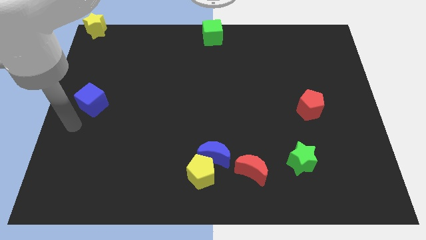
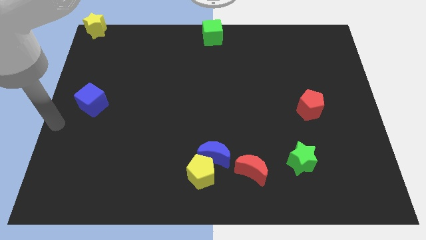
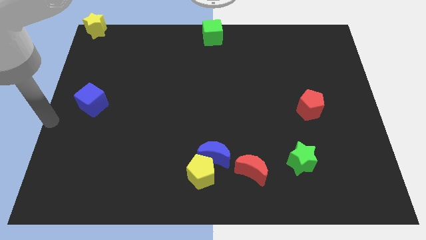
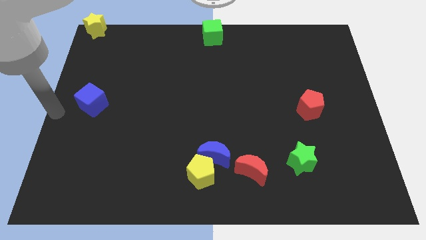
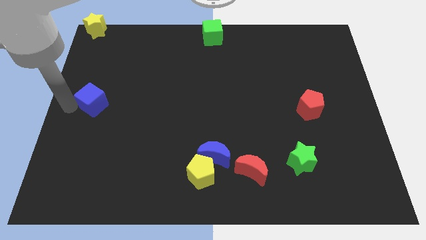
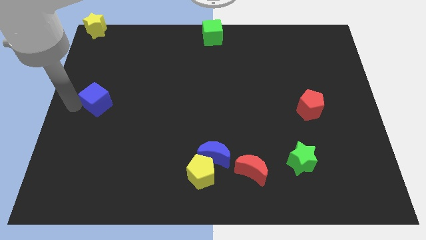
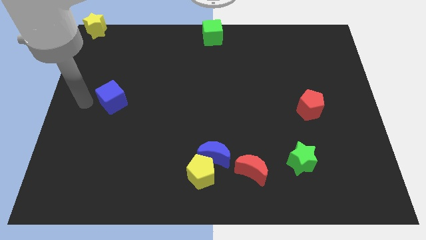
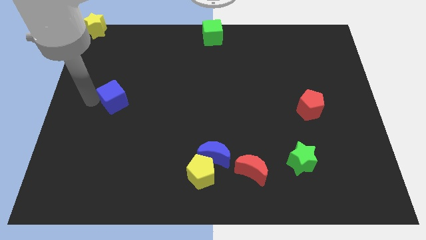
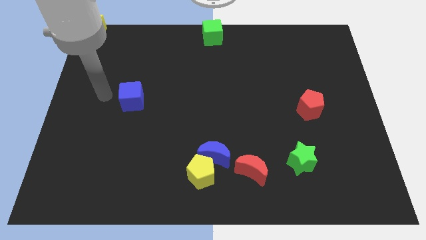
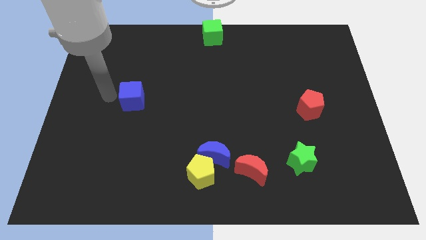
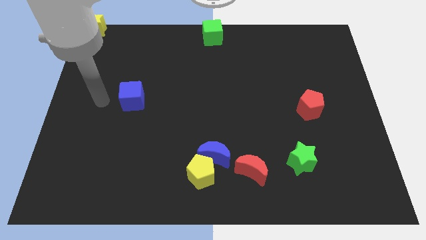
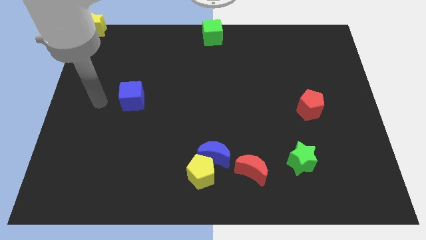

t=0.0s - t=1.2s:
push blue cube towards the right

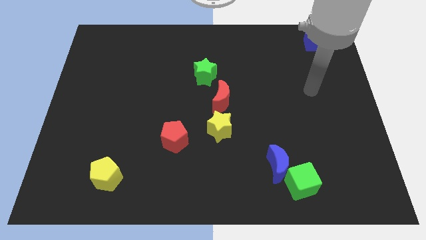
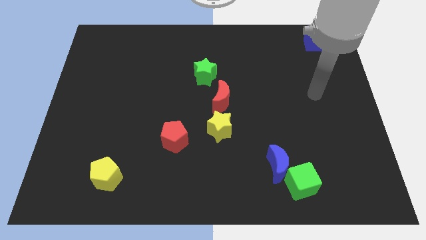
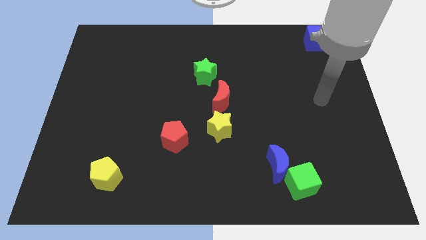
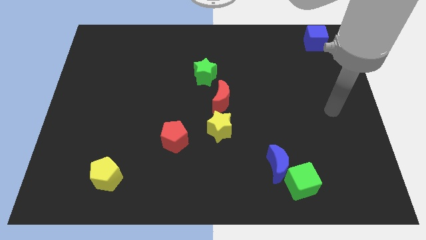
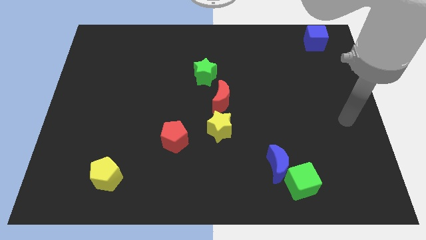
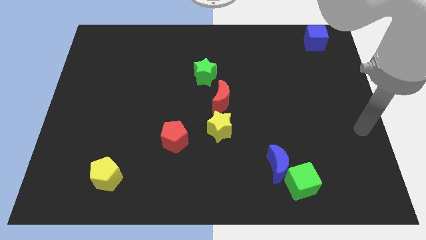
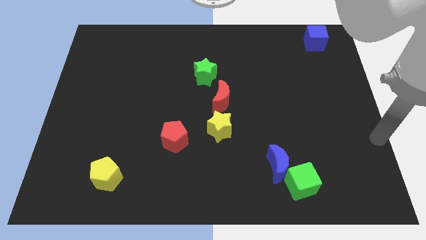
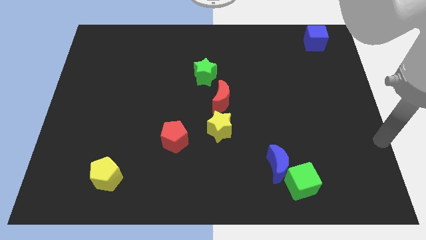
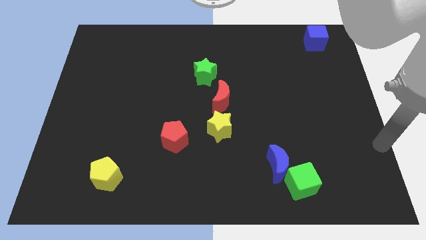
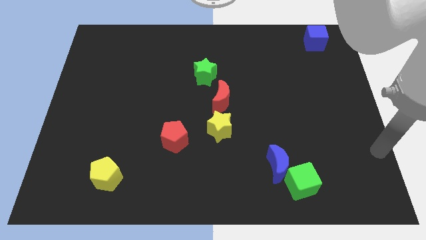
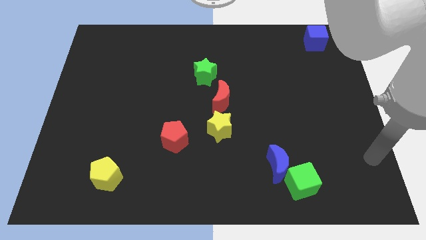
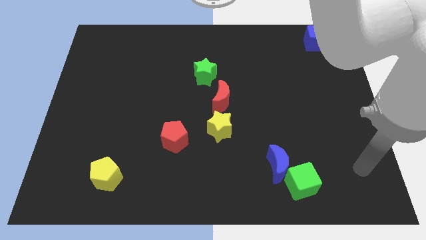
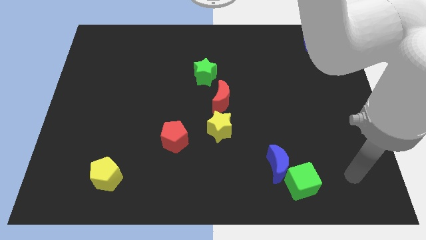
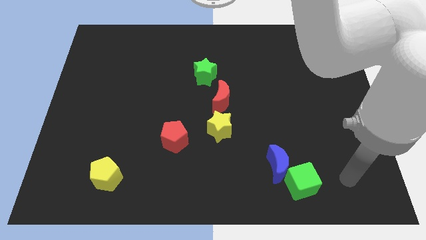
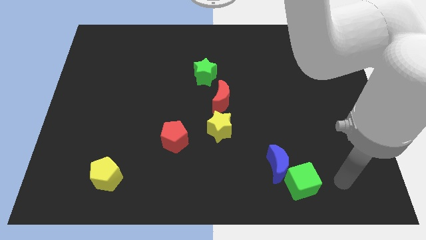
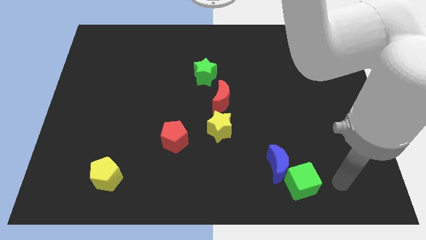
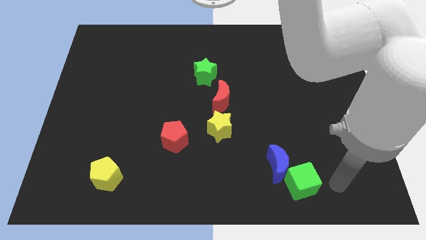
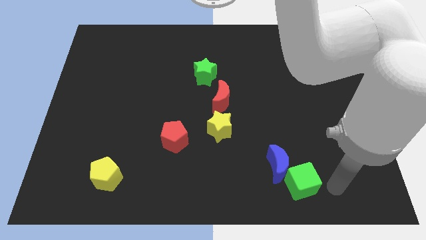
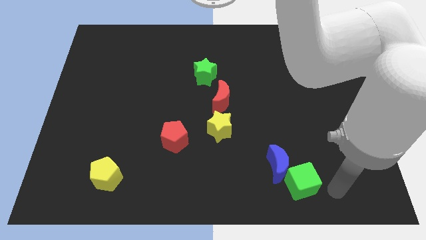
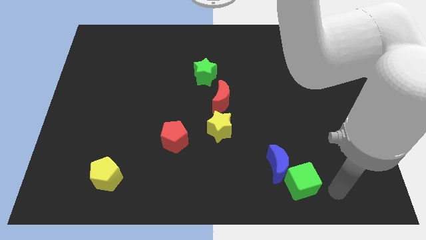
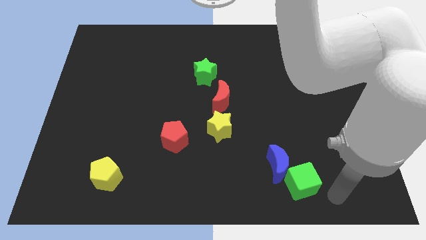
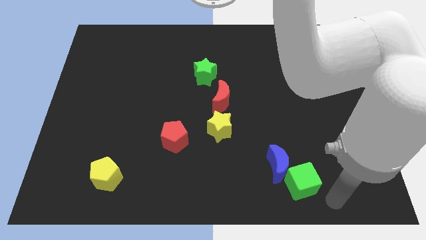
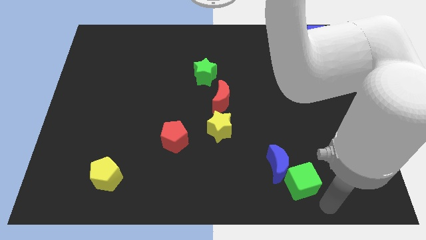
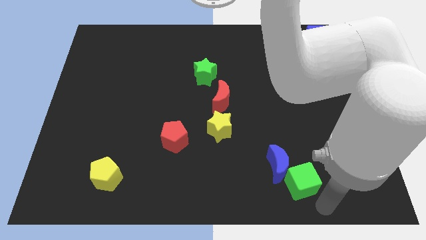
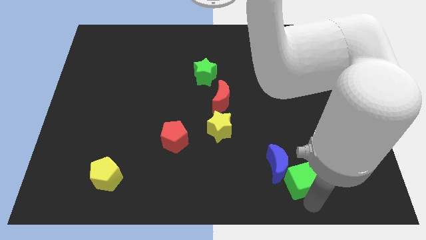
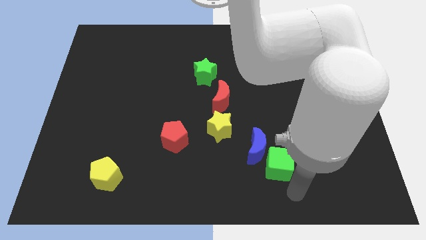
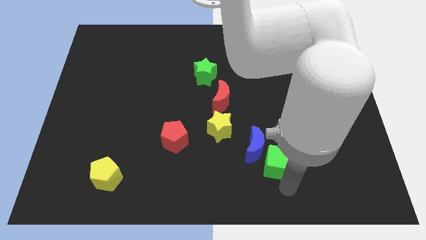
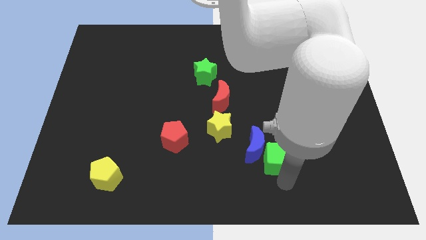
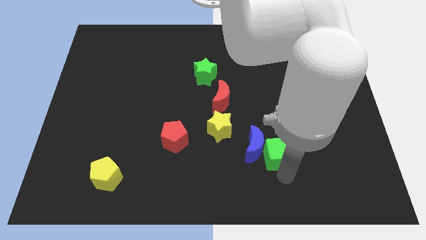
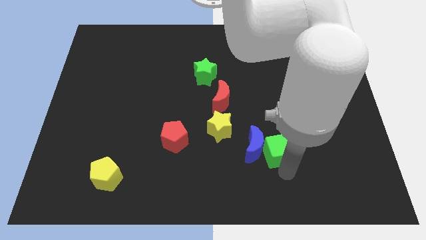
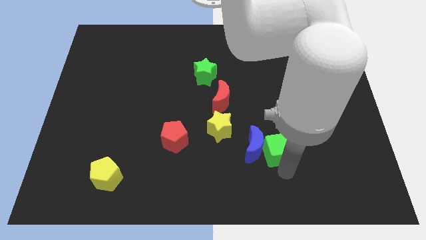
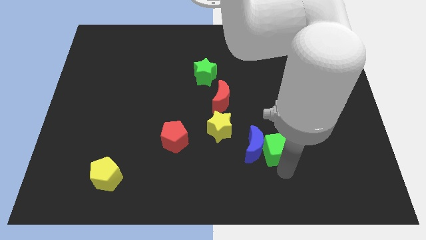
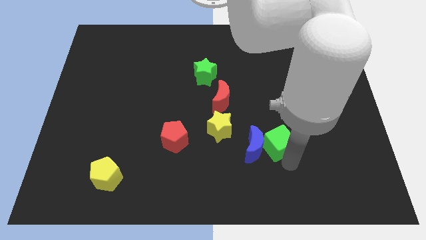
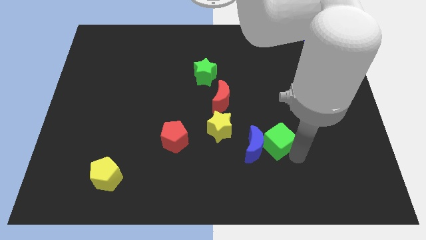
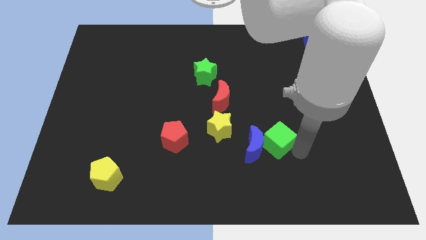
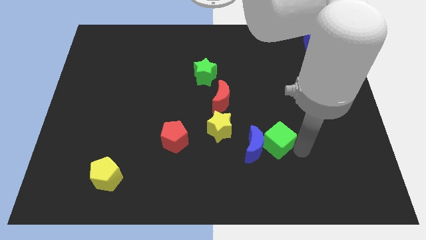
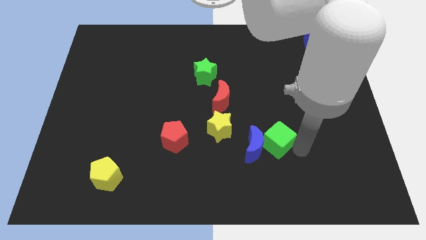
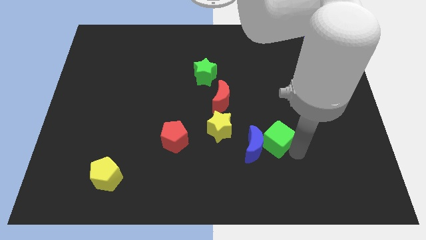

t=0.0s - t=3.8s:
push the green cube to the right of the blue crescent

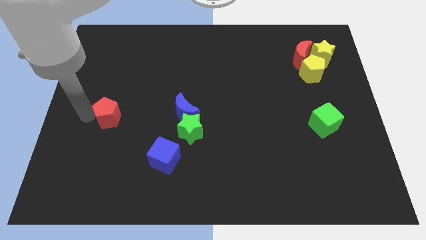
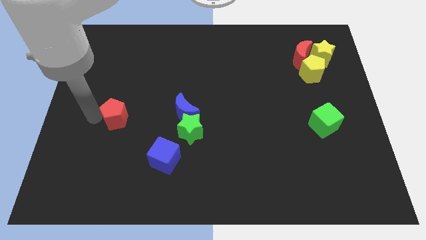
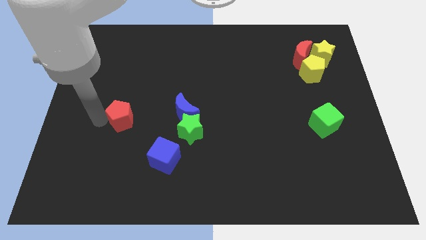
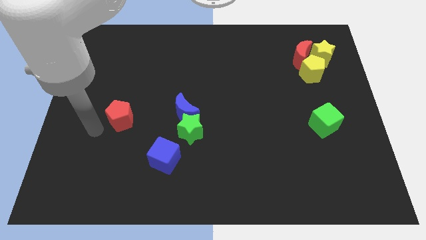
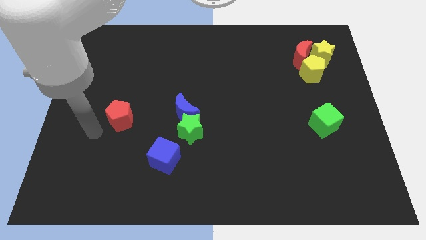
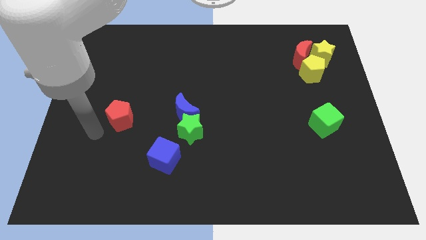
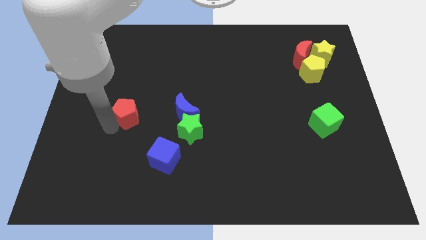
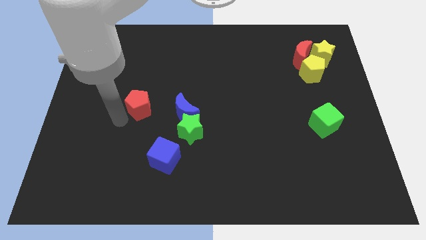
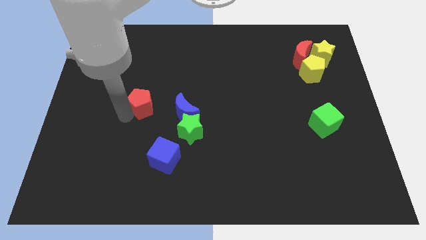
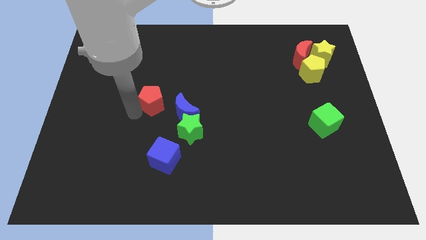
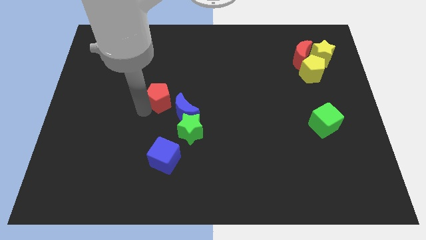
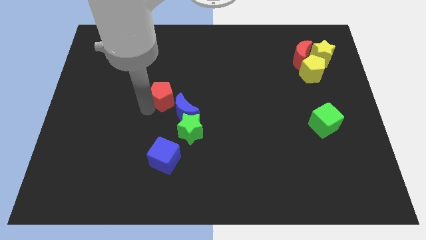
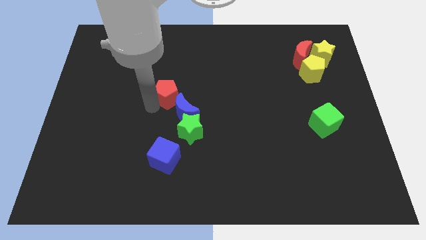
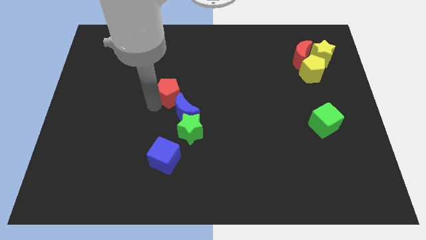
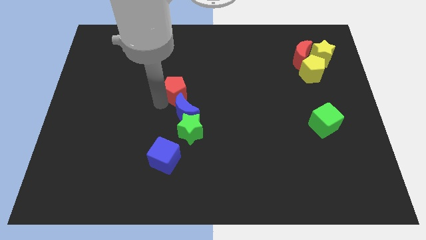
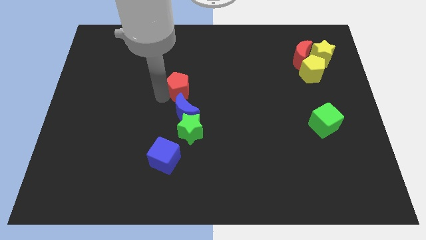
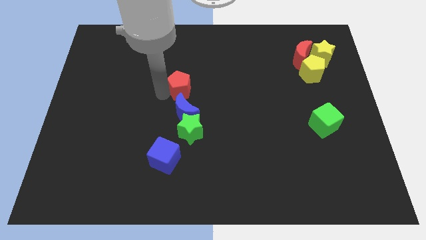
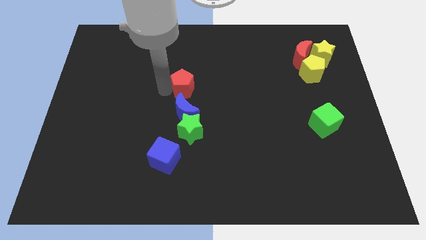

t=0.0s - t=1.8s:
move the red pentagon above the blue moon

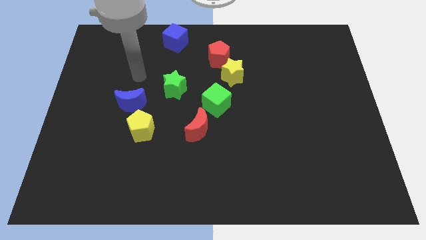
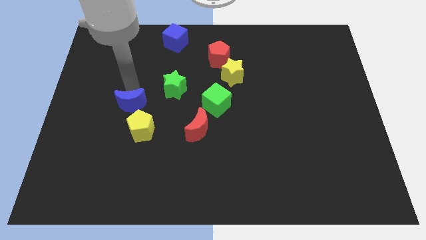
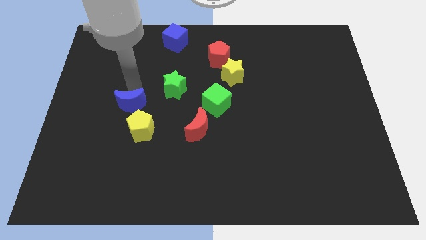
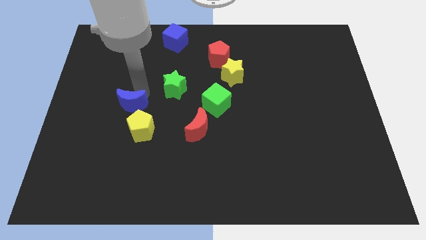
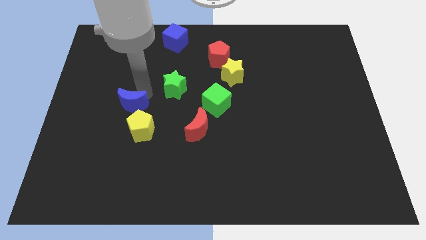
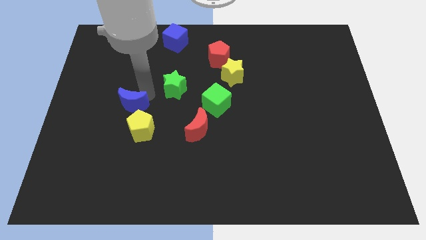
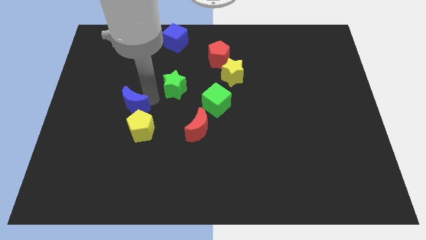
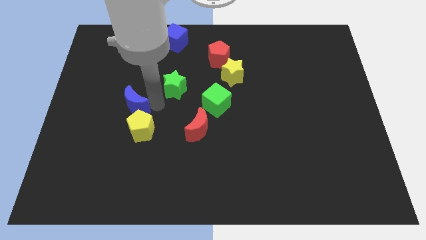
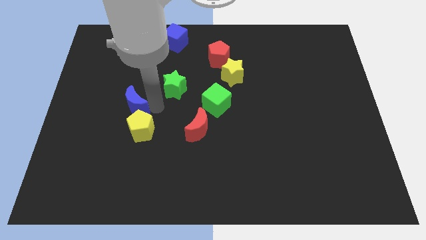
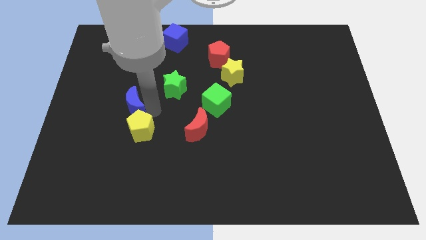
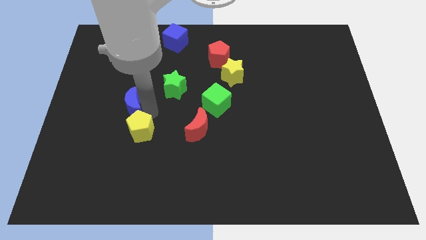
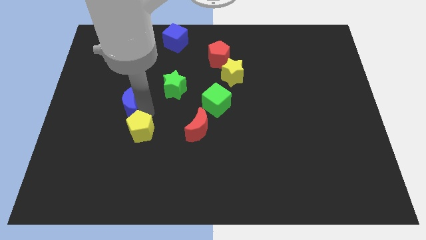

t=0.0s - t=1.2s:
slightly move the blue crescent into the yellow pentagon

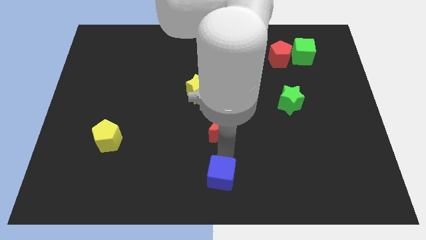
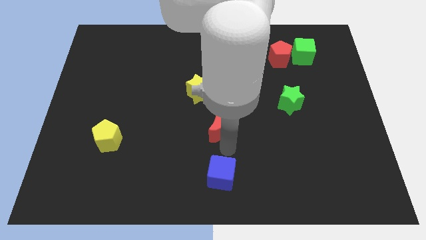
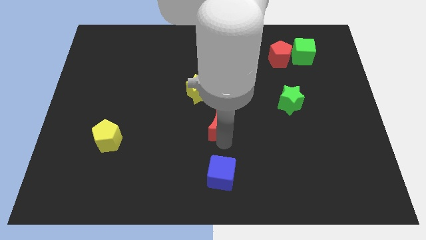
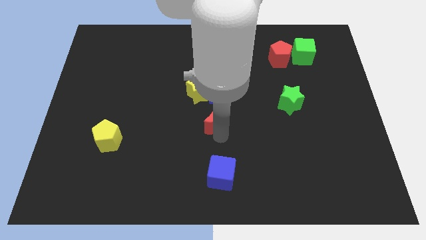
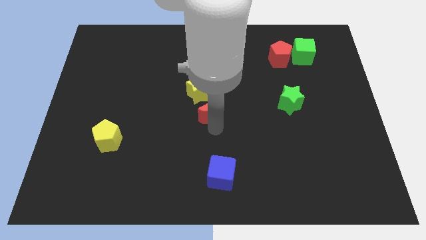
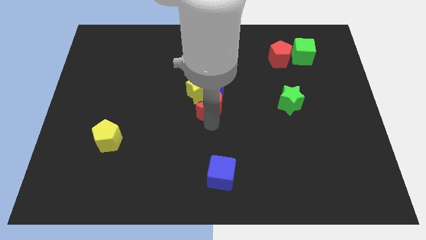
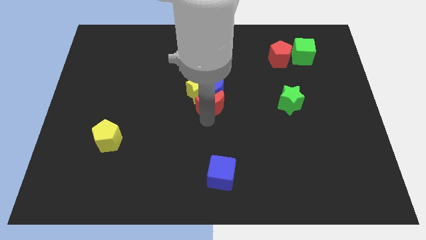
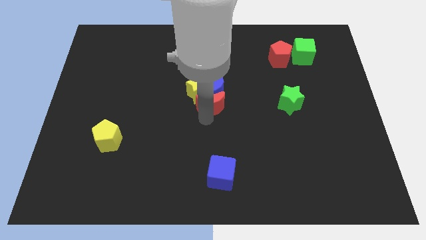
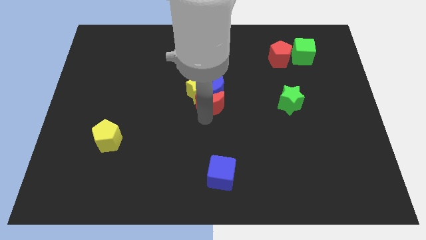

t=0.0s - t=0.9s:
push the red moon close to the blue moon and yellow star
